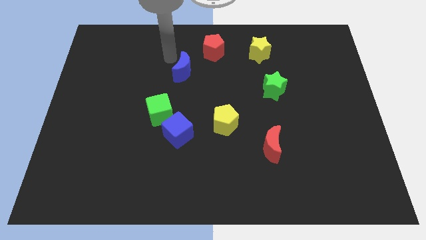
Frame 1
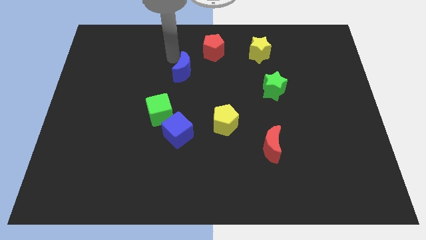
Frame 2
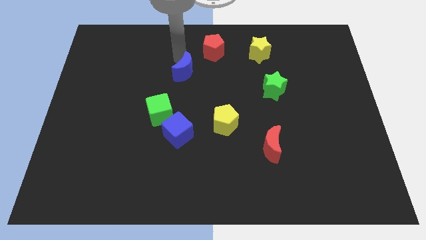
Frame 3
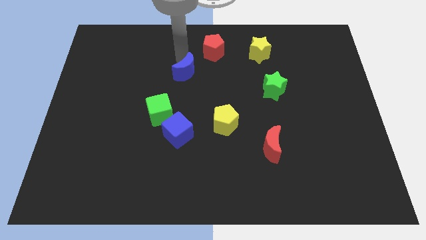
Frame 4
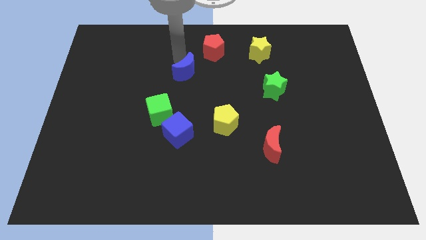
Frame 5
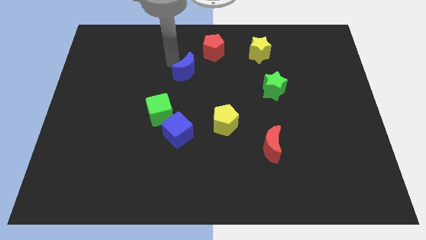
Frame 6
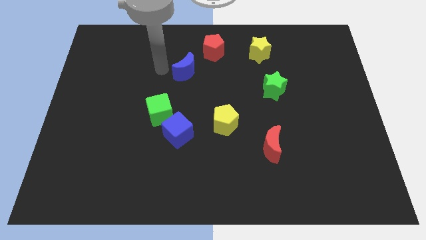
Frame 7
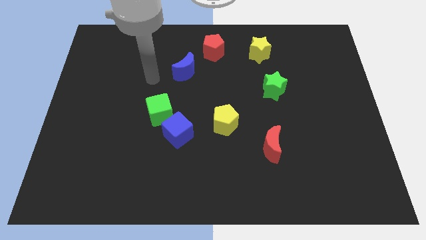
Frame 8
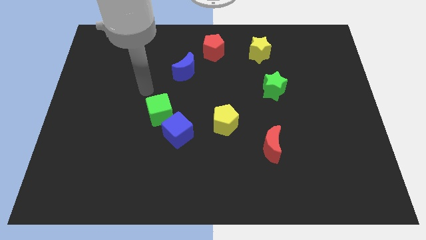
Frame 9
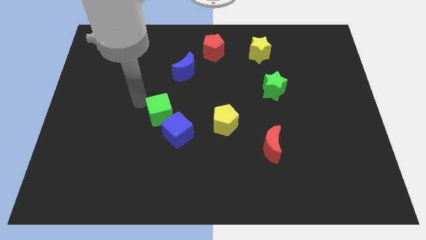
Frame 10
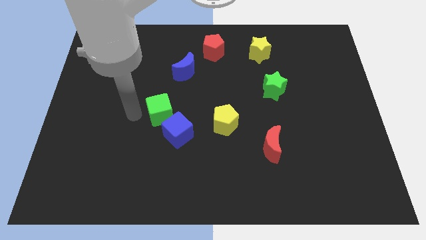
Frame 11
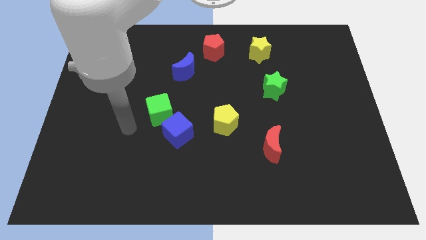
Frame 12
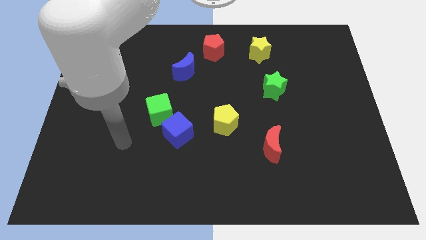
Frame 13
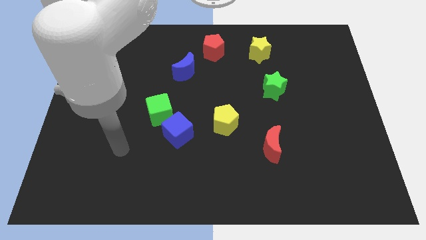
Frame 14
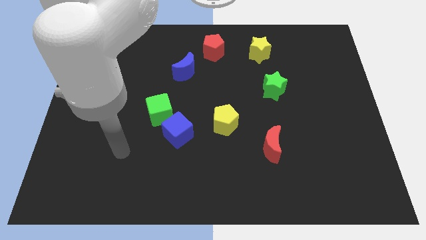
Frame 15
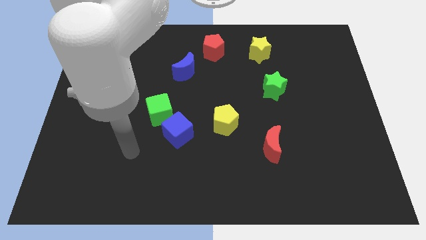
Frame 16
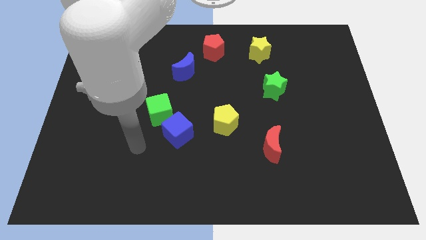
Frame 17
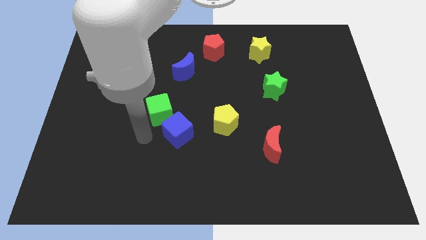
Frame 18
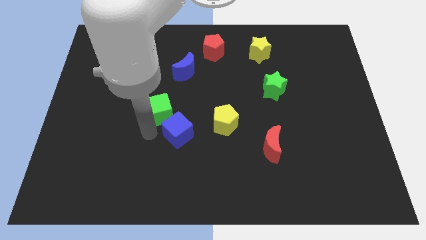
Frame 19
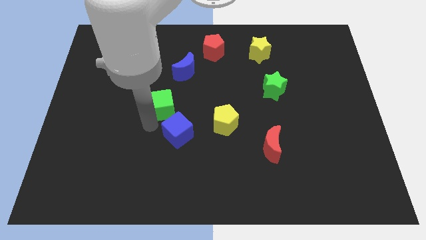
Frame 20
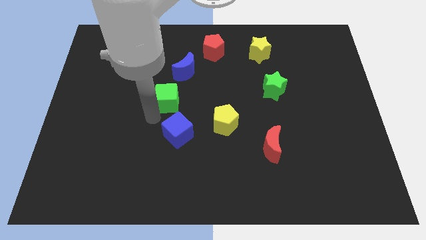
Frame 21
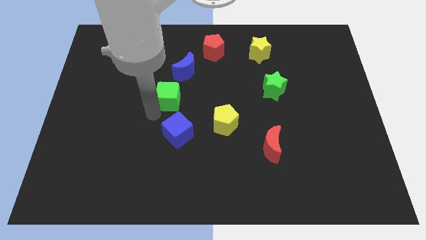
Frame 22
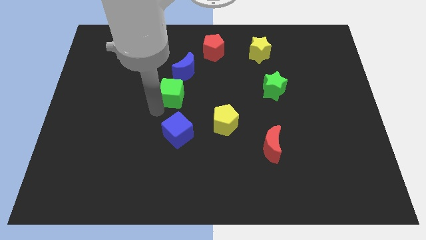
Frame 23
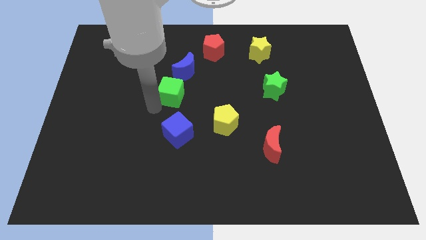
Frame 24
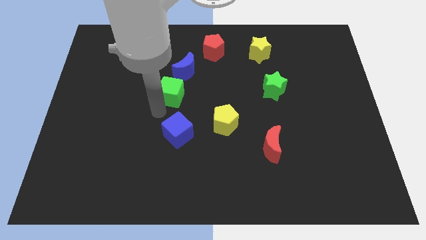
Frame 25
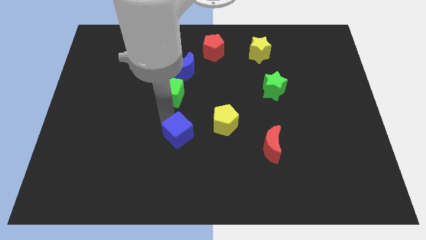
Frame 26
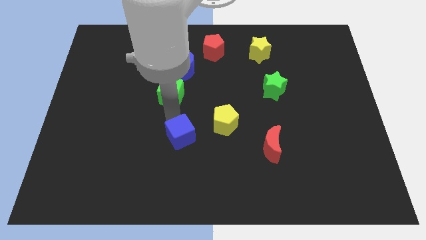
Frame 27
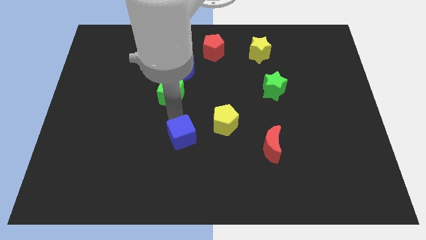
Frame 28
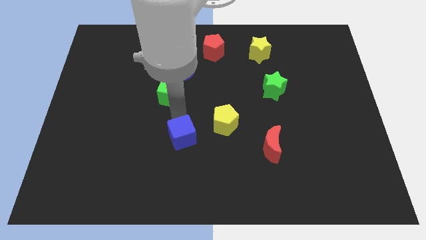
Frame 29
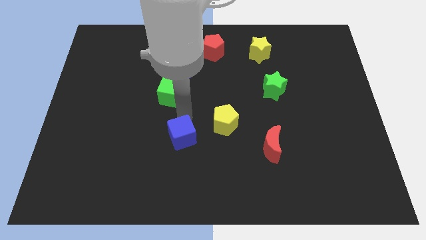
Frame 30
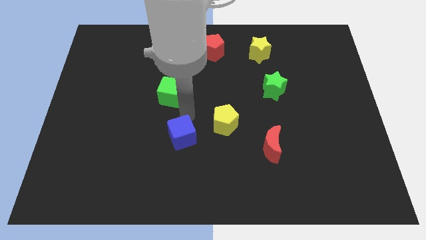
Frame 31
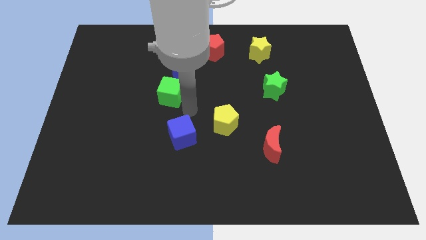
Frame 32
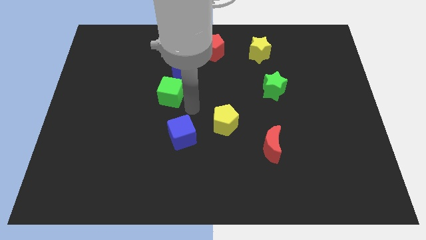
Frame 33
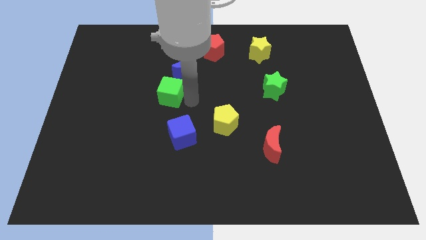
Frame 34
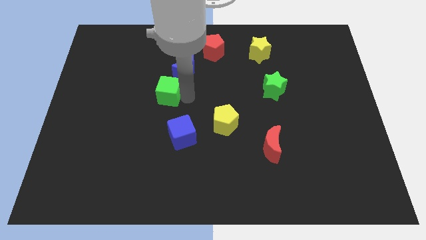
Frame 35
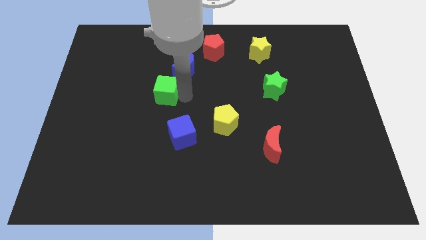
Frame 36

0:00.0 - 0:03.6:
push the green cube towards the blue moon

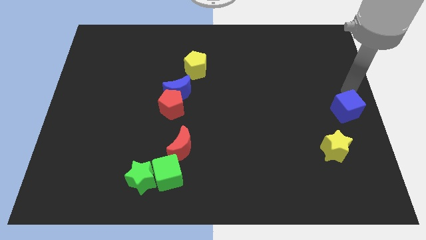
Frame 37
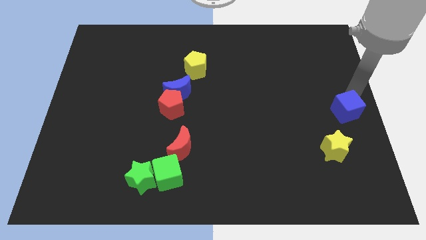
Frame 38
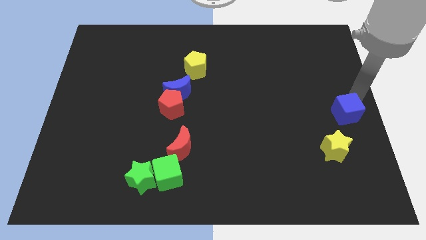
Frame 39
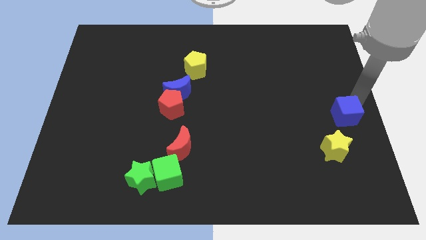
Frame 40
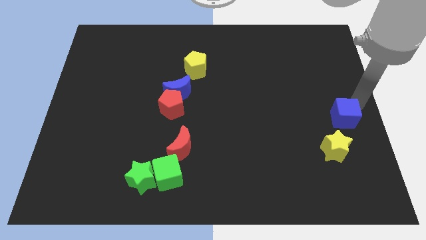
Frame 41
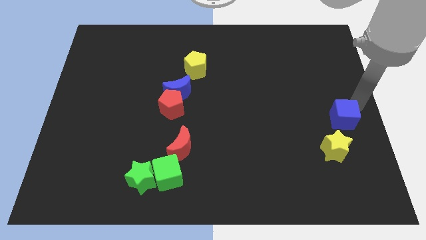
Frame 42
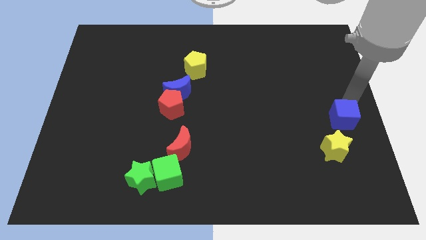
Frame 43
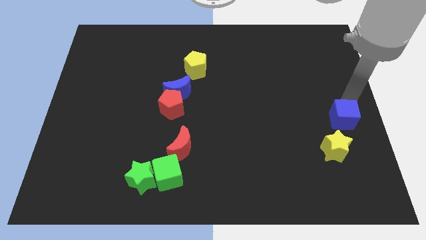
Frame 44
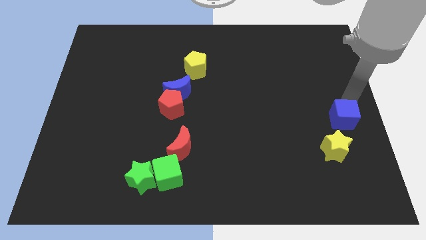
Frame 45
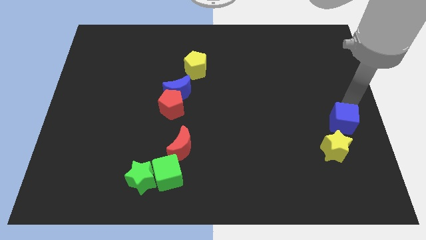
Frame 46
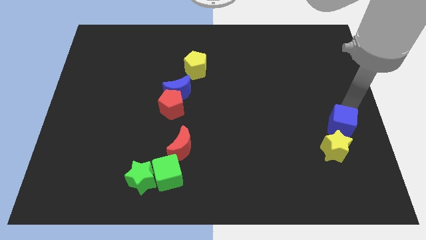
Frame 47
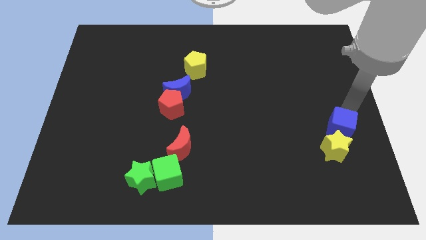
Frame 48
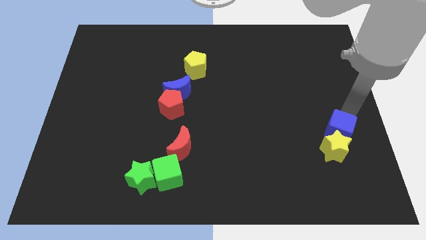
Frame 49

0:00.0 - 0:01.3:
move the blue cube into the yellow star

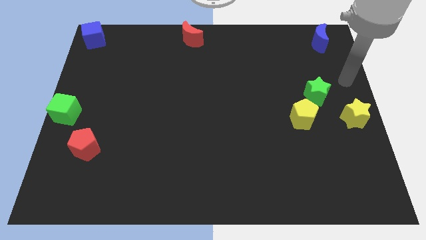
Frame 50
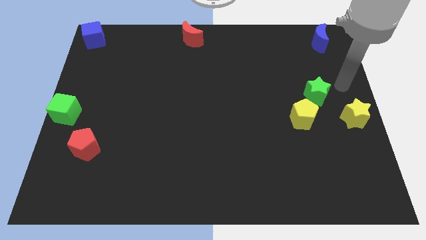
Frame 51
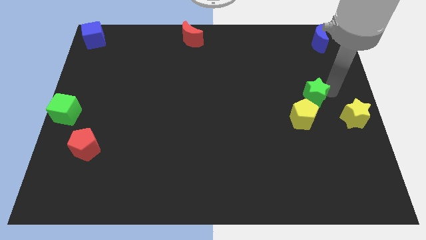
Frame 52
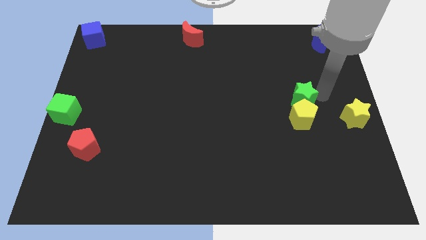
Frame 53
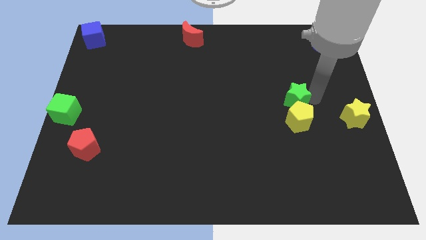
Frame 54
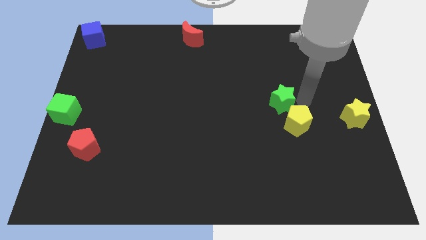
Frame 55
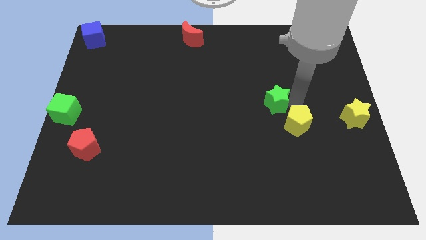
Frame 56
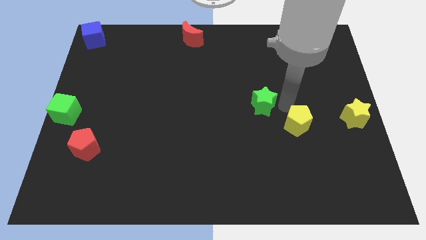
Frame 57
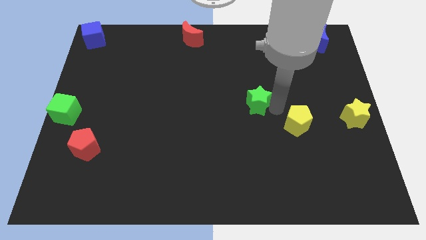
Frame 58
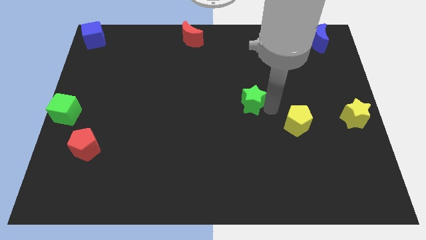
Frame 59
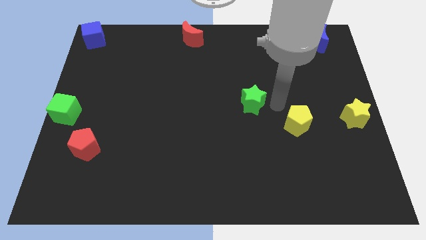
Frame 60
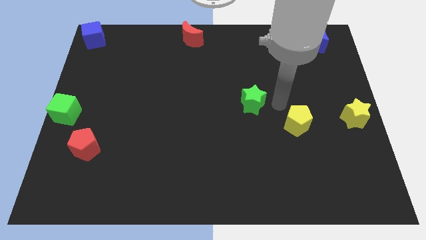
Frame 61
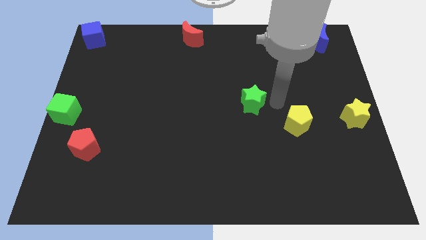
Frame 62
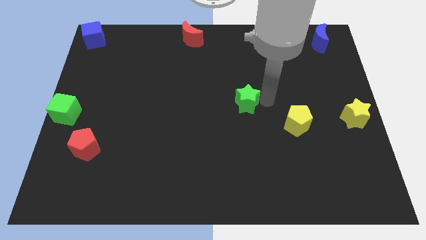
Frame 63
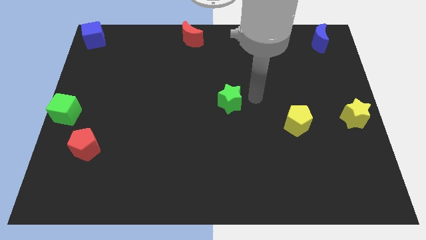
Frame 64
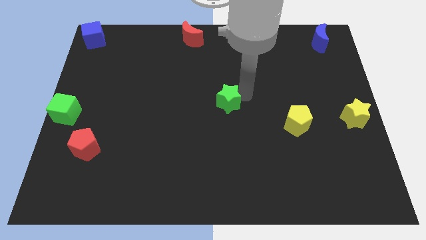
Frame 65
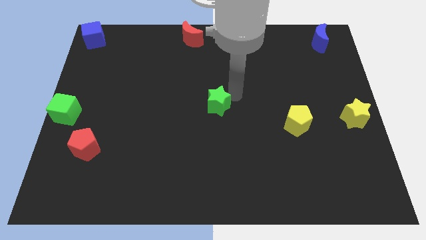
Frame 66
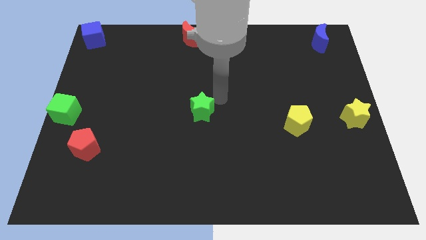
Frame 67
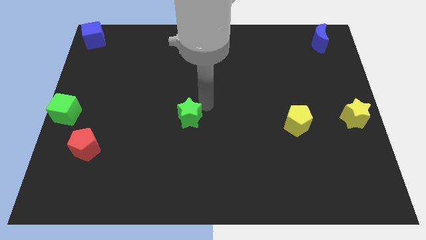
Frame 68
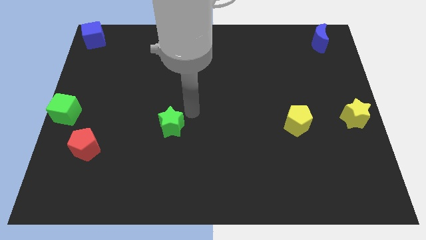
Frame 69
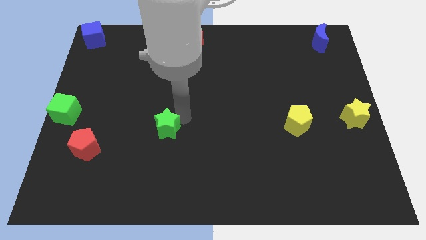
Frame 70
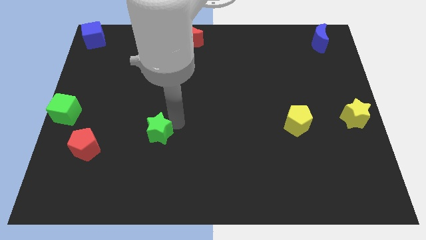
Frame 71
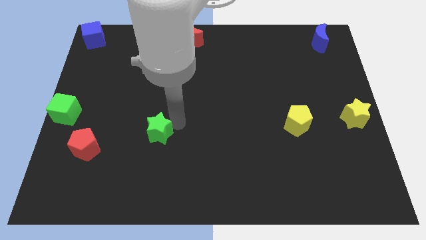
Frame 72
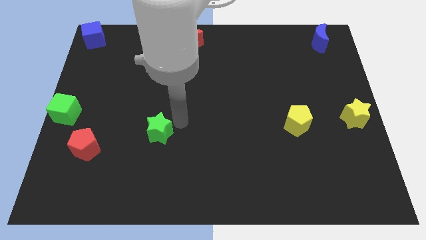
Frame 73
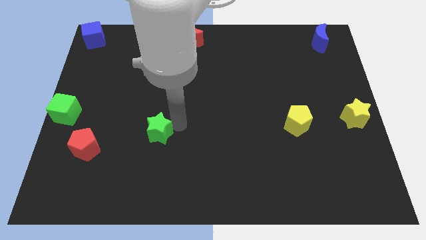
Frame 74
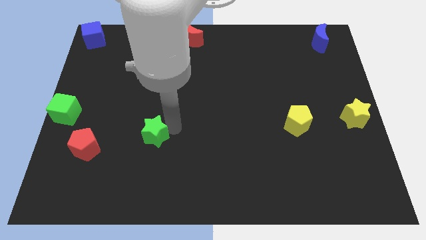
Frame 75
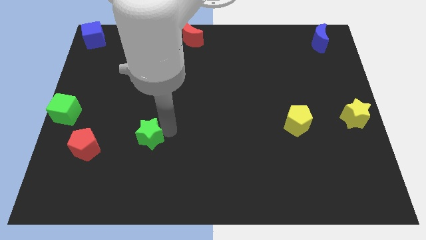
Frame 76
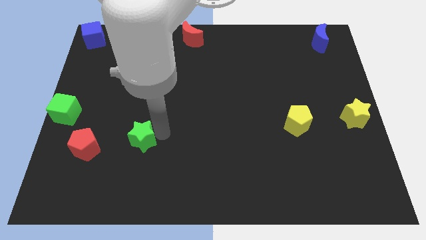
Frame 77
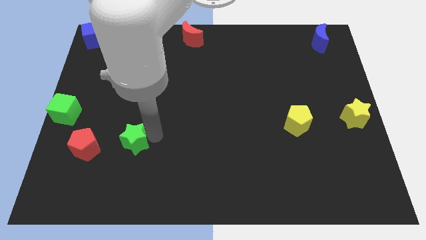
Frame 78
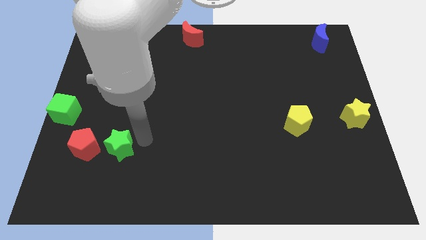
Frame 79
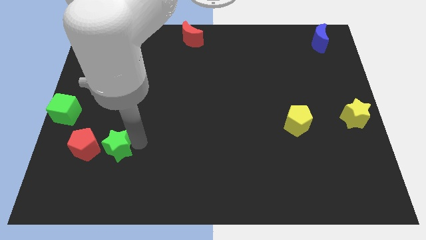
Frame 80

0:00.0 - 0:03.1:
place the green star right of the red pentagon

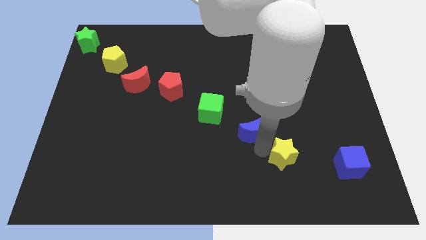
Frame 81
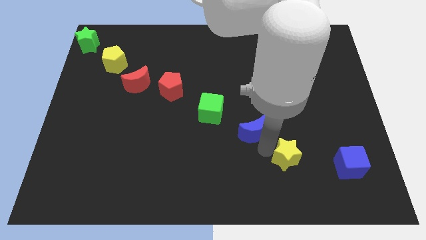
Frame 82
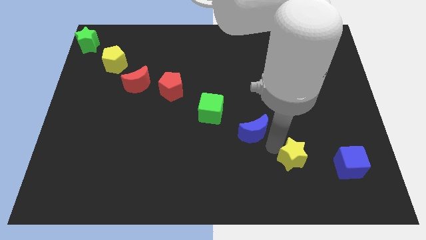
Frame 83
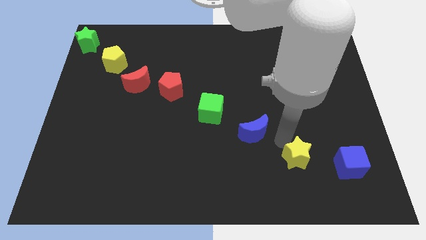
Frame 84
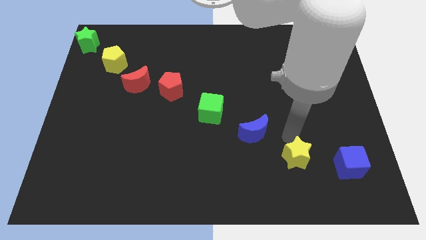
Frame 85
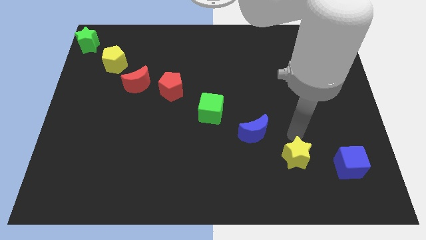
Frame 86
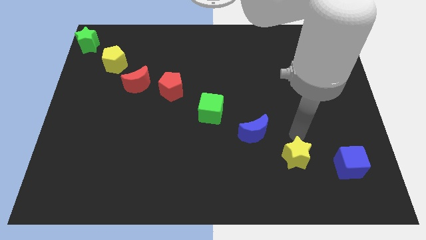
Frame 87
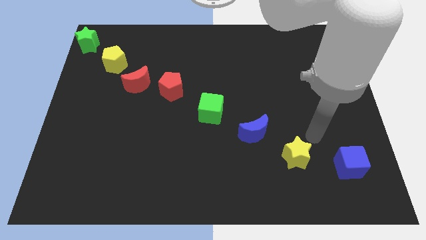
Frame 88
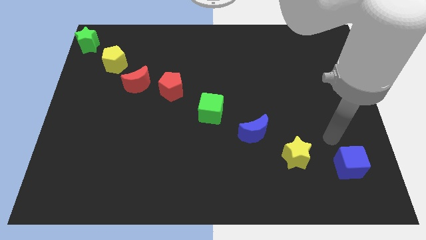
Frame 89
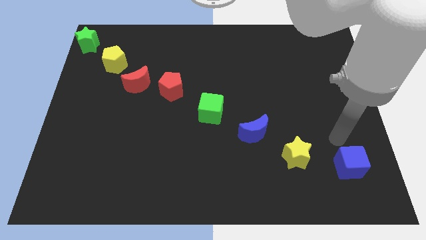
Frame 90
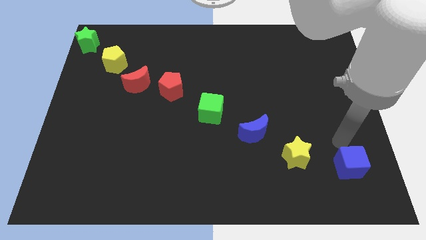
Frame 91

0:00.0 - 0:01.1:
place the arm above the blue cube
